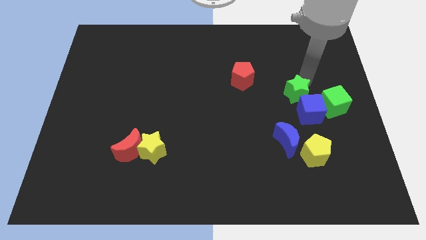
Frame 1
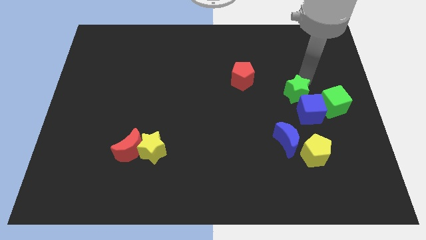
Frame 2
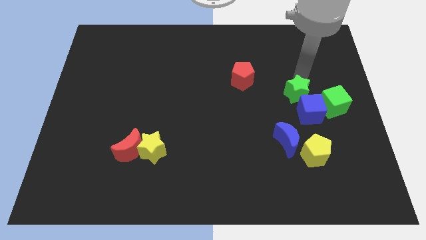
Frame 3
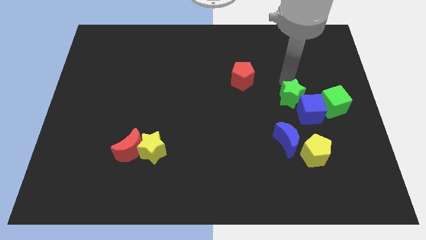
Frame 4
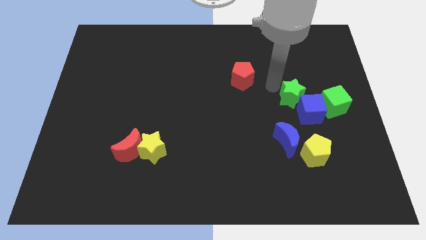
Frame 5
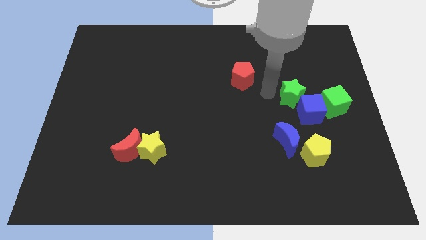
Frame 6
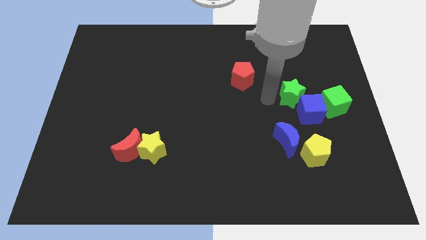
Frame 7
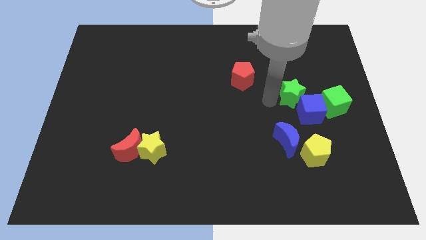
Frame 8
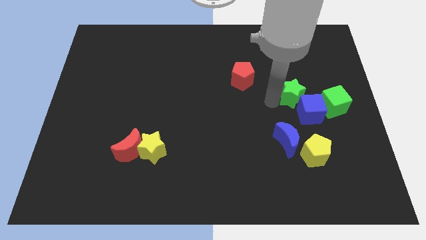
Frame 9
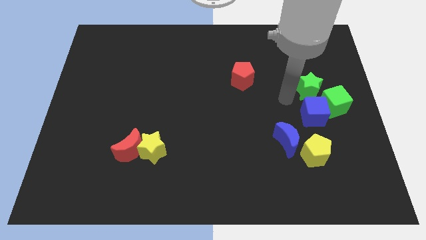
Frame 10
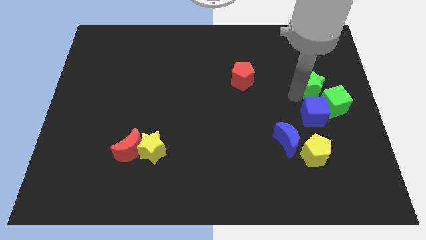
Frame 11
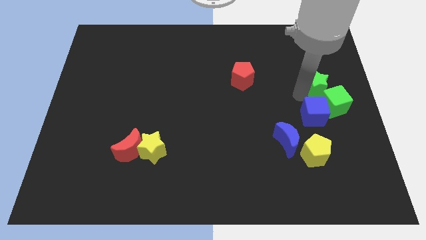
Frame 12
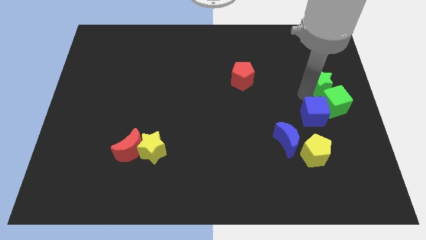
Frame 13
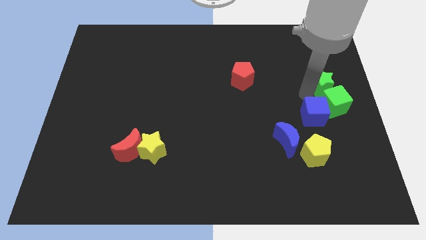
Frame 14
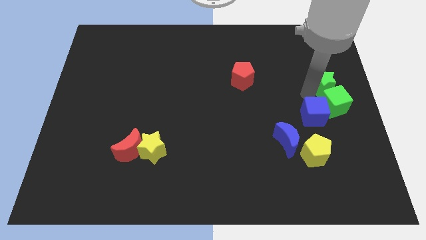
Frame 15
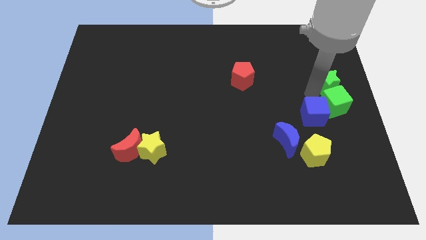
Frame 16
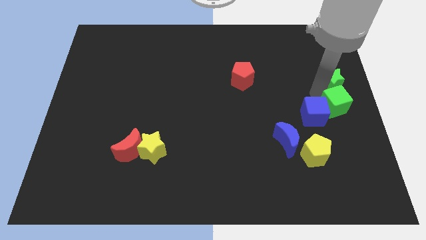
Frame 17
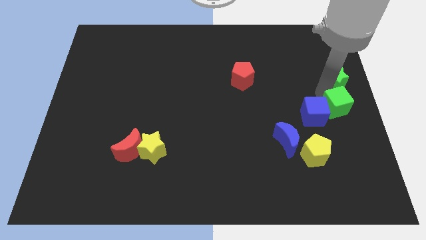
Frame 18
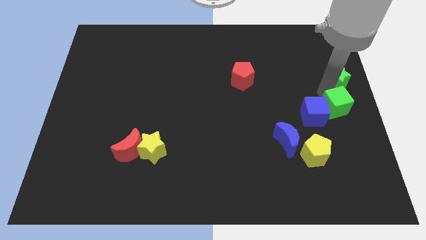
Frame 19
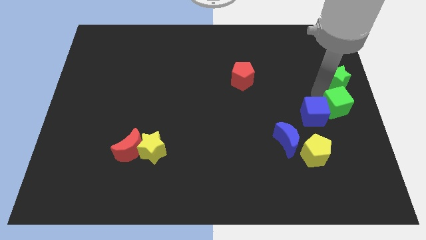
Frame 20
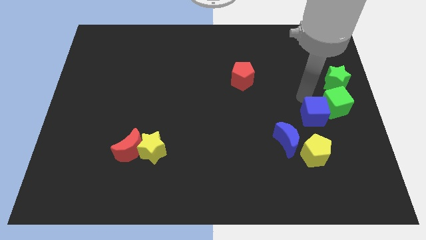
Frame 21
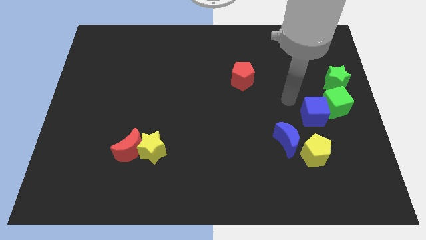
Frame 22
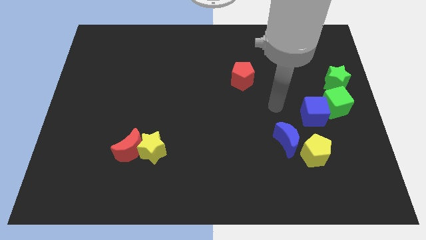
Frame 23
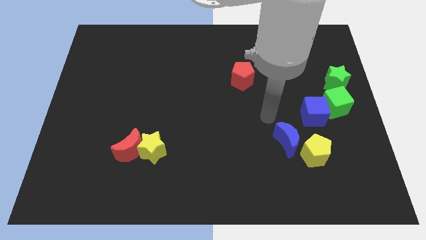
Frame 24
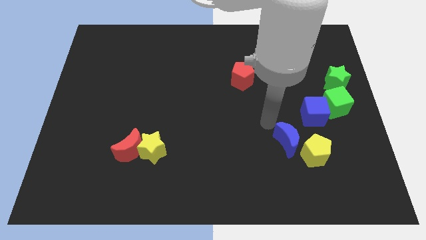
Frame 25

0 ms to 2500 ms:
push the green star to the top of the green cube

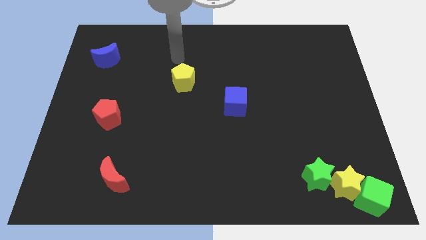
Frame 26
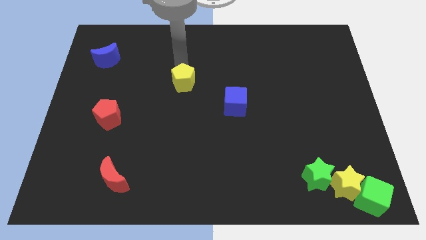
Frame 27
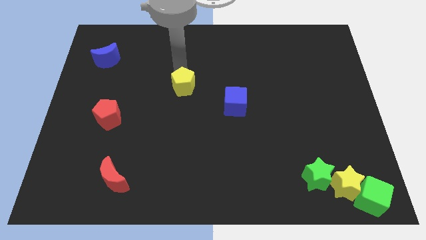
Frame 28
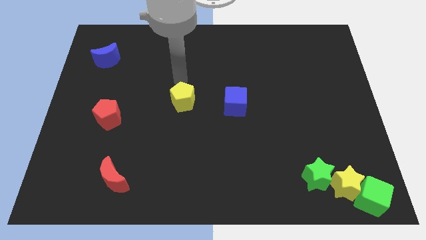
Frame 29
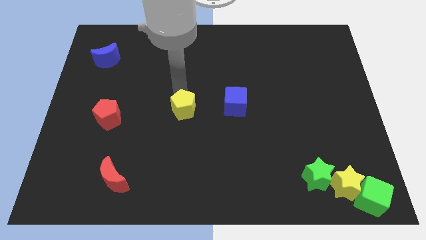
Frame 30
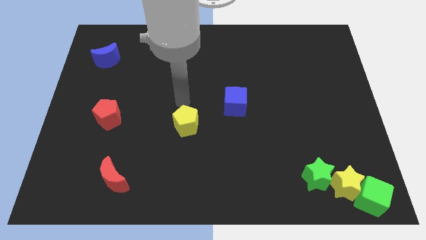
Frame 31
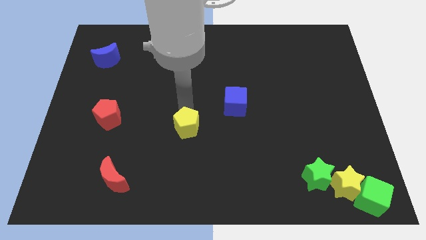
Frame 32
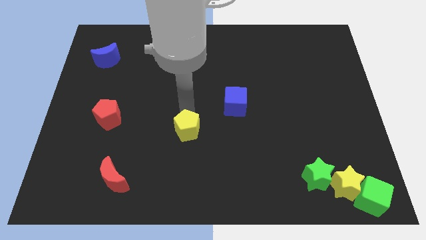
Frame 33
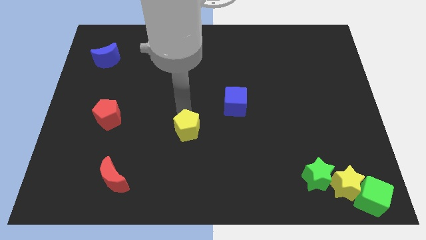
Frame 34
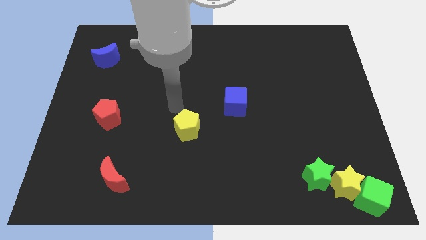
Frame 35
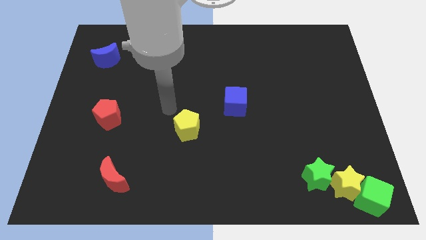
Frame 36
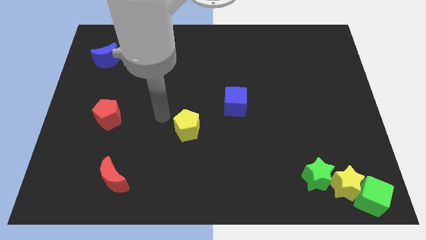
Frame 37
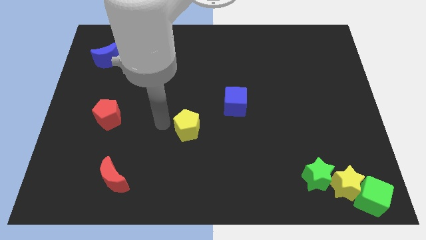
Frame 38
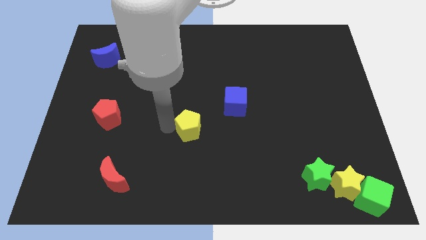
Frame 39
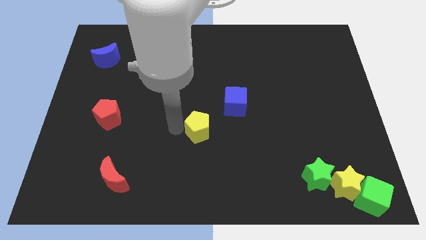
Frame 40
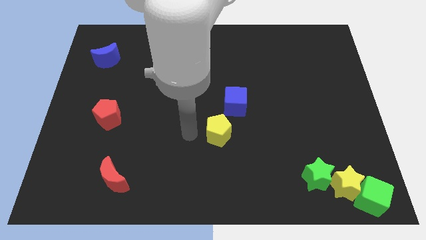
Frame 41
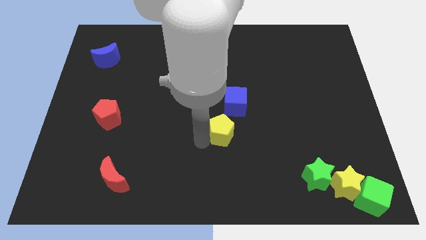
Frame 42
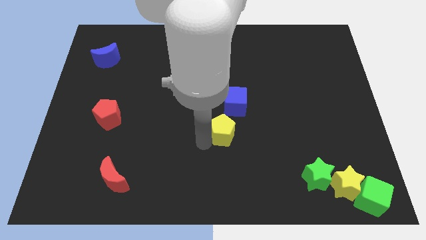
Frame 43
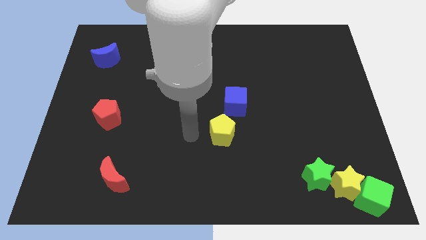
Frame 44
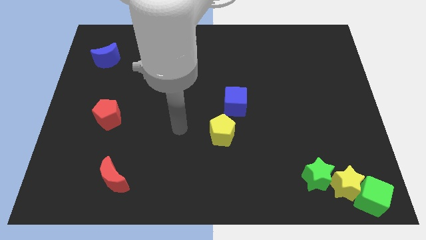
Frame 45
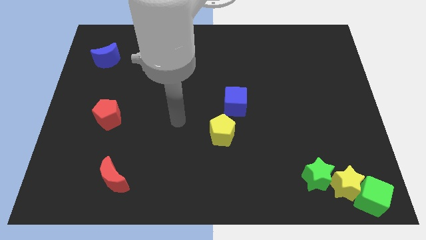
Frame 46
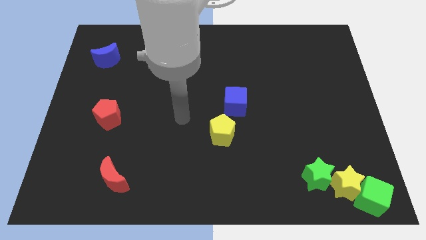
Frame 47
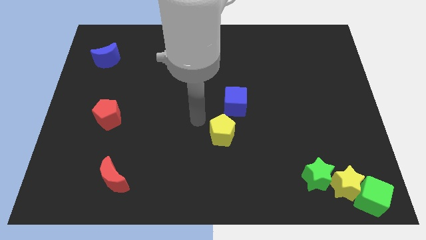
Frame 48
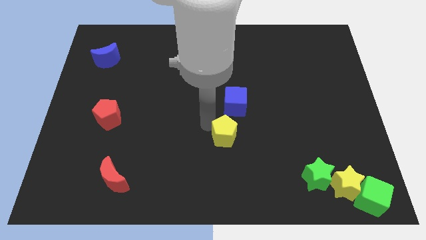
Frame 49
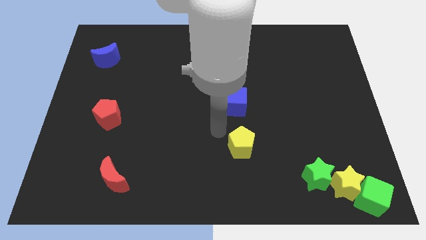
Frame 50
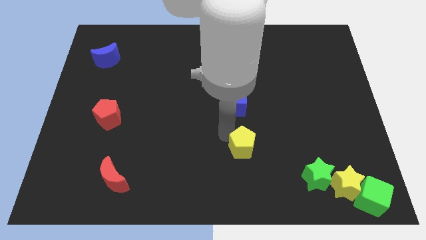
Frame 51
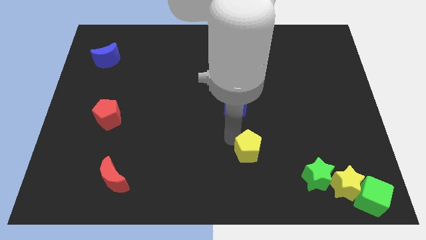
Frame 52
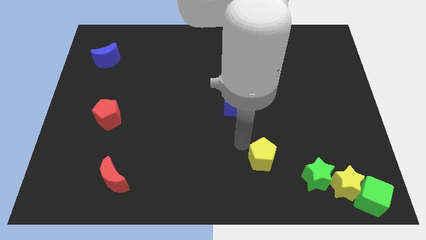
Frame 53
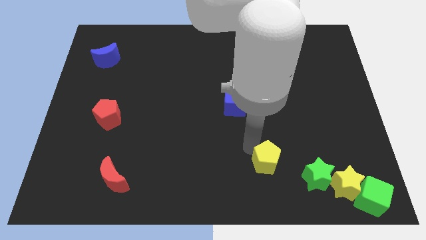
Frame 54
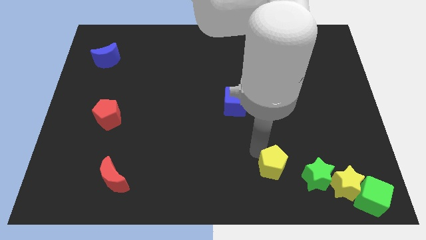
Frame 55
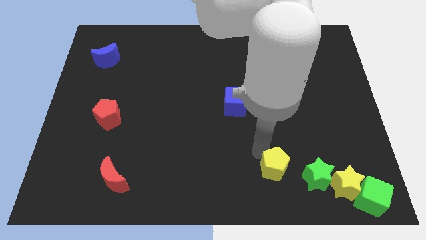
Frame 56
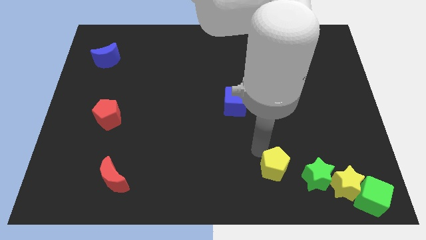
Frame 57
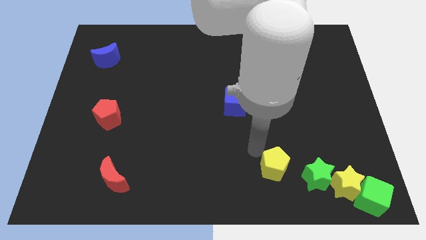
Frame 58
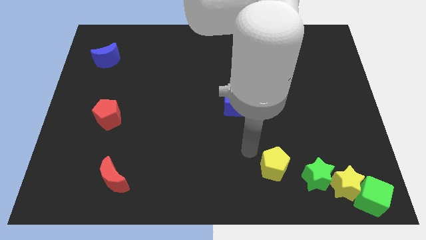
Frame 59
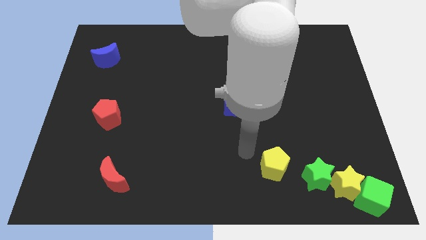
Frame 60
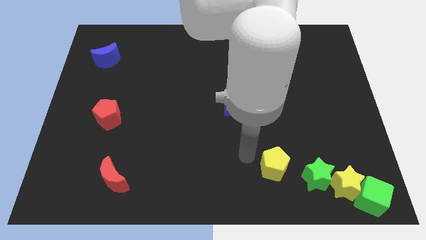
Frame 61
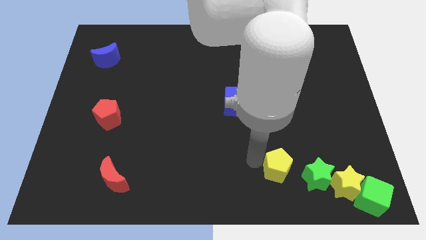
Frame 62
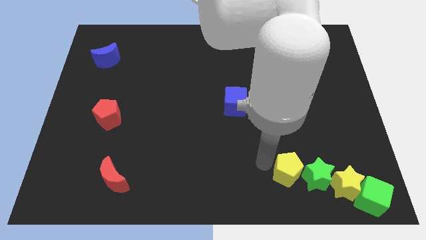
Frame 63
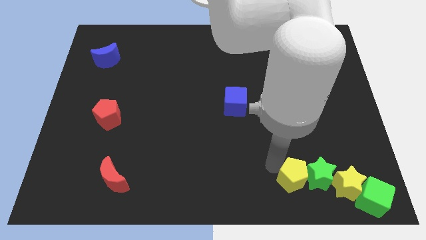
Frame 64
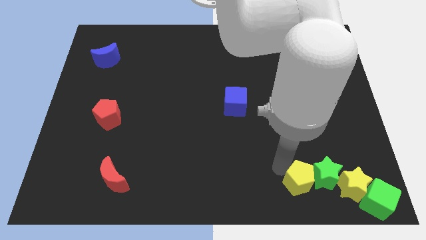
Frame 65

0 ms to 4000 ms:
place the yellow pentagon to the left of the green star

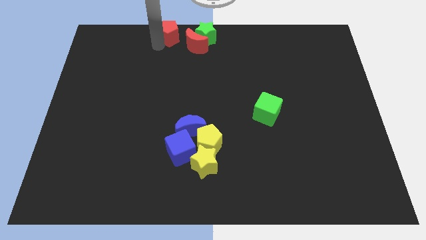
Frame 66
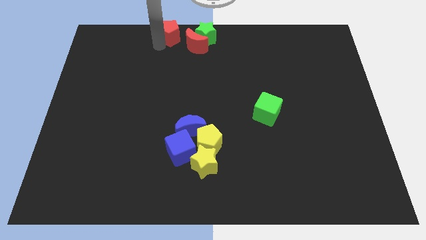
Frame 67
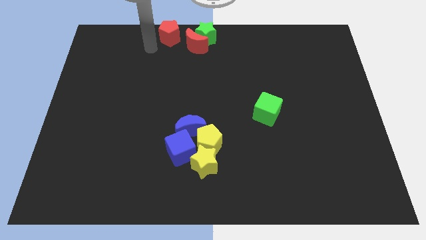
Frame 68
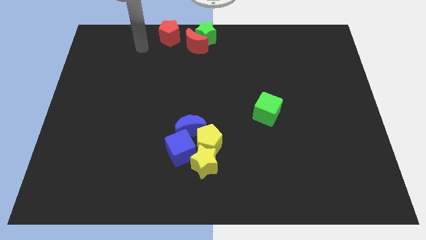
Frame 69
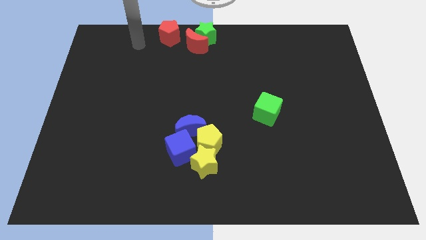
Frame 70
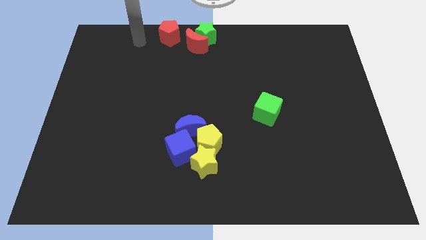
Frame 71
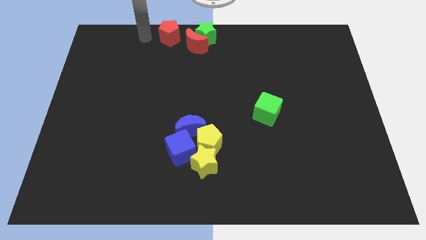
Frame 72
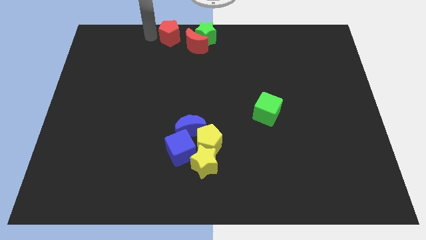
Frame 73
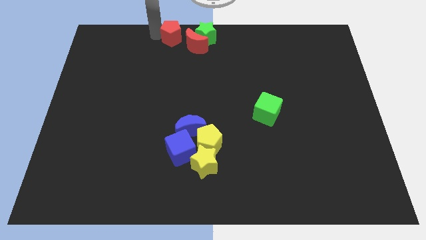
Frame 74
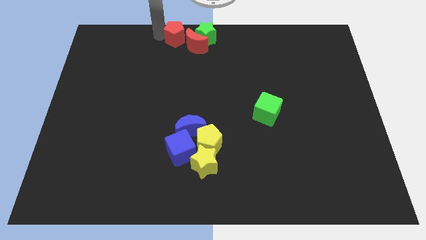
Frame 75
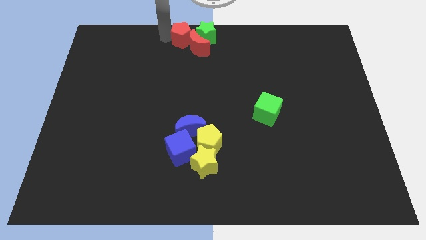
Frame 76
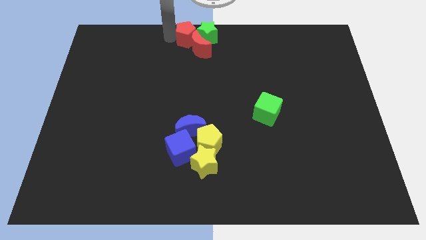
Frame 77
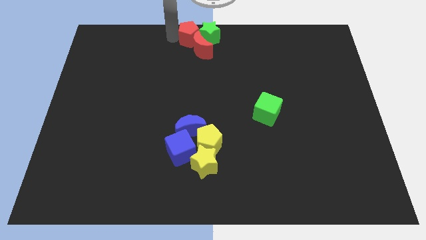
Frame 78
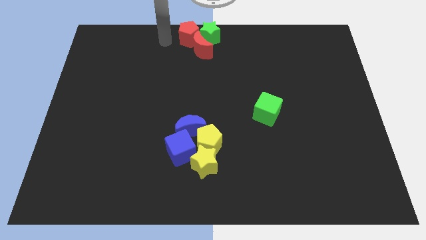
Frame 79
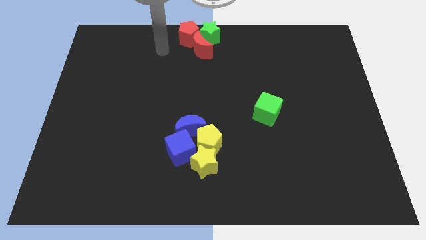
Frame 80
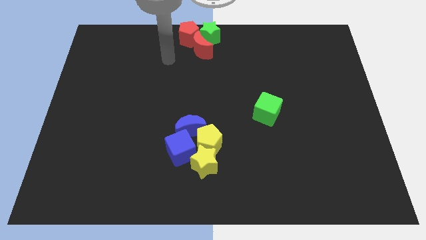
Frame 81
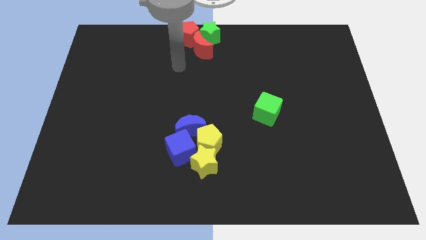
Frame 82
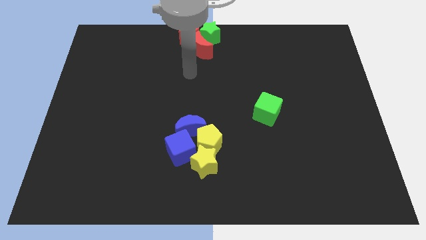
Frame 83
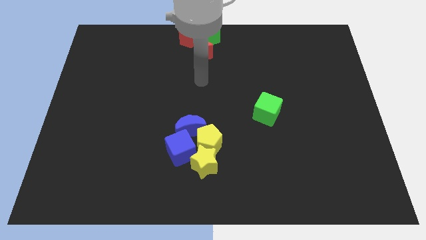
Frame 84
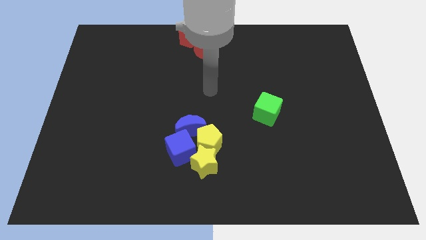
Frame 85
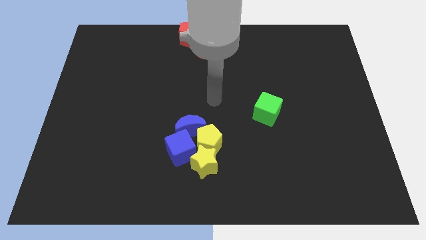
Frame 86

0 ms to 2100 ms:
push red pentagon towards green star

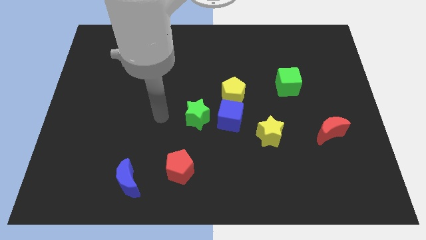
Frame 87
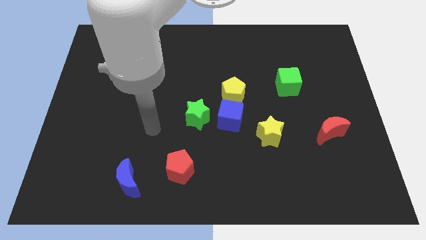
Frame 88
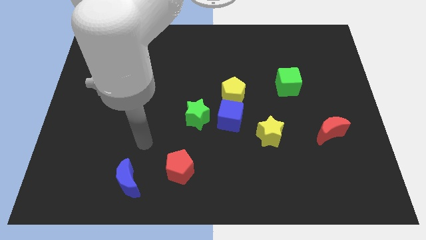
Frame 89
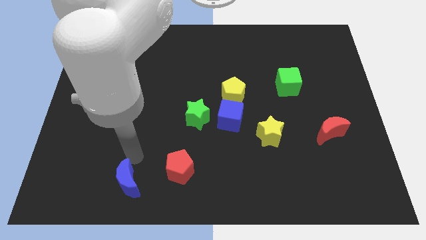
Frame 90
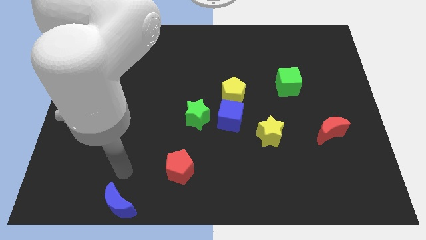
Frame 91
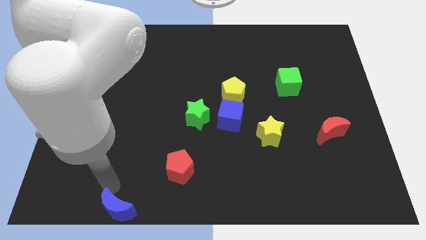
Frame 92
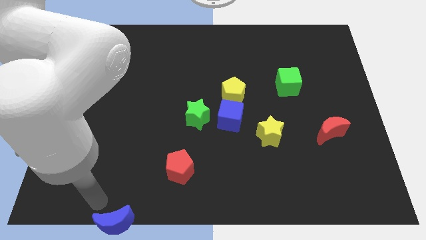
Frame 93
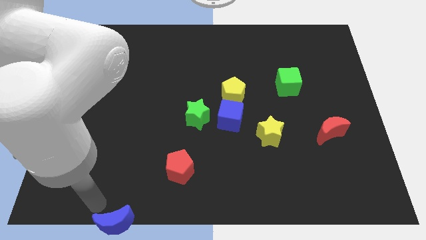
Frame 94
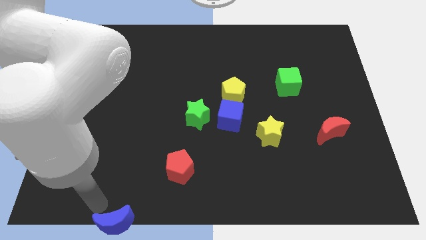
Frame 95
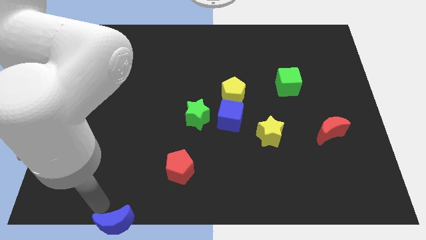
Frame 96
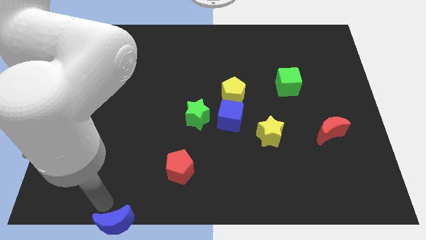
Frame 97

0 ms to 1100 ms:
push the blue crescent to the bottom left of the board
